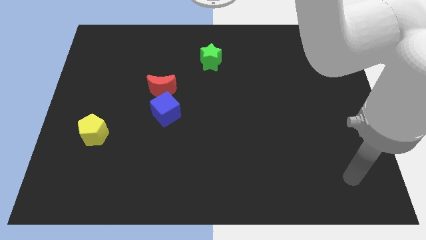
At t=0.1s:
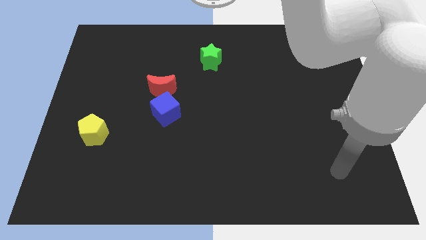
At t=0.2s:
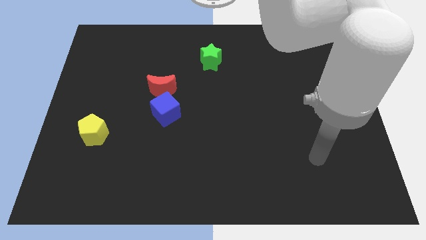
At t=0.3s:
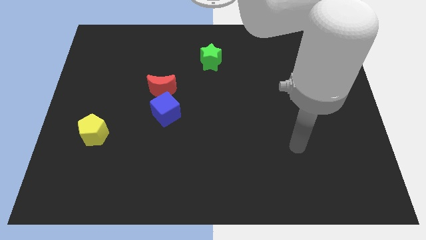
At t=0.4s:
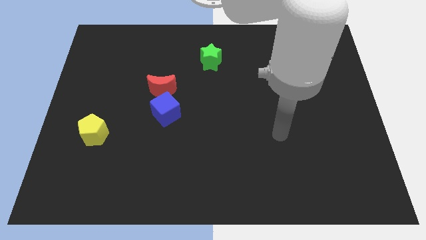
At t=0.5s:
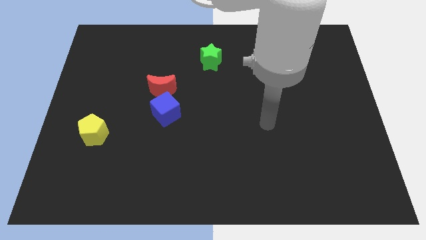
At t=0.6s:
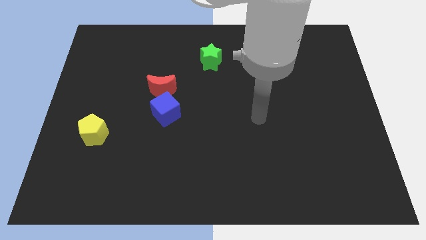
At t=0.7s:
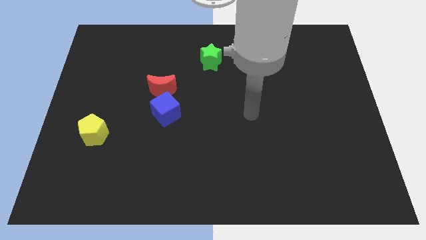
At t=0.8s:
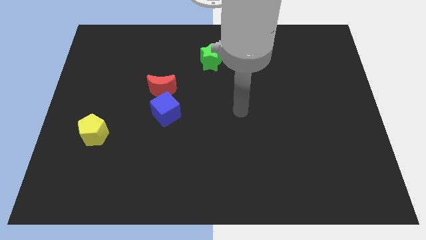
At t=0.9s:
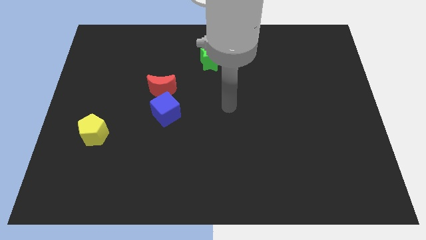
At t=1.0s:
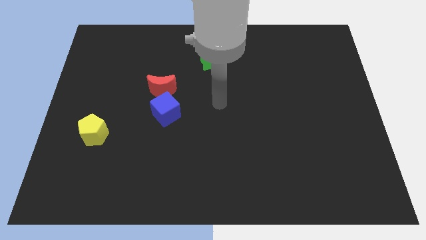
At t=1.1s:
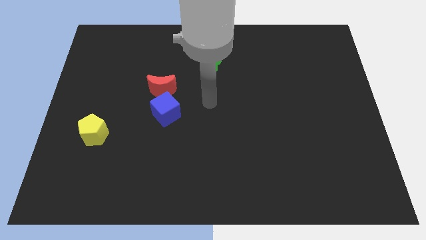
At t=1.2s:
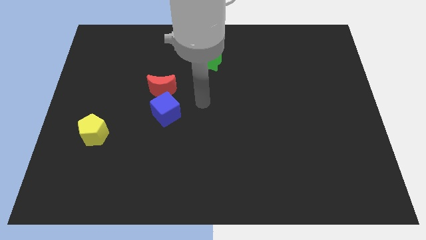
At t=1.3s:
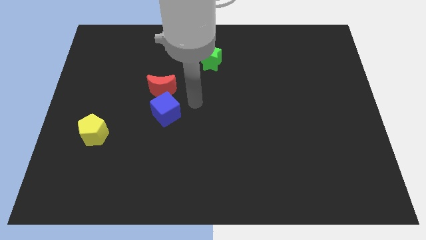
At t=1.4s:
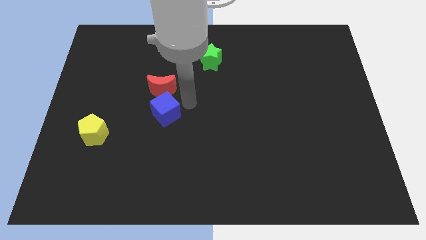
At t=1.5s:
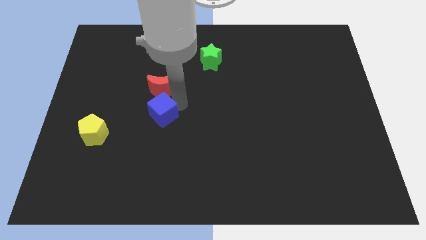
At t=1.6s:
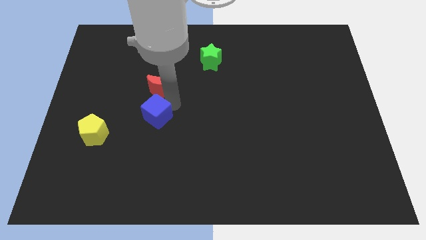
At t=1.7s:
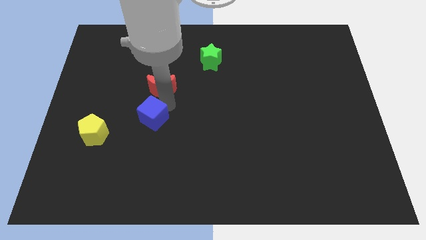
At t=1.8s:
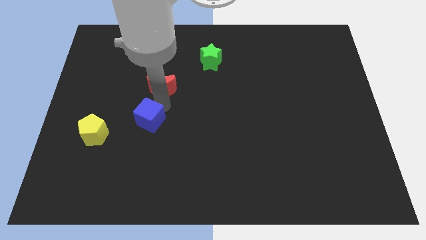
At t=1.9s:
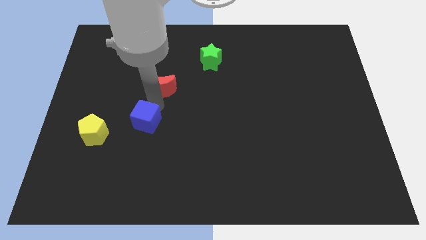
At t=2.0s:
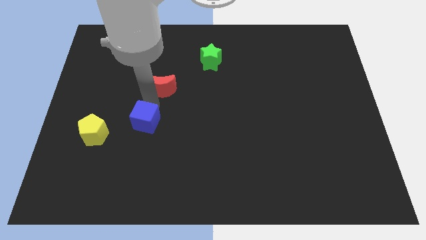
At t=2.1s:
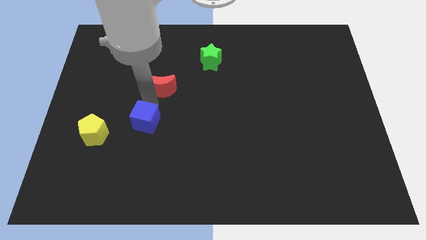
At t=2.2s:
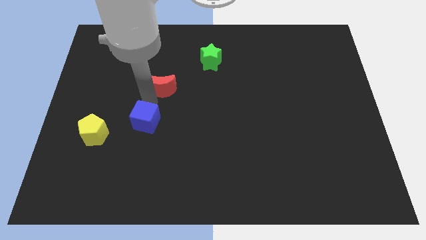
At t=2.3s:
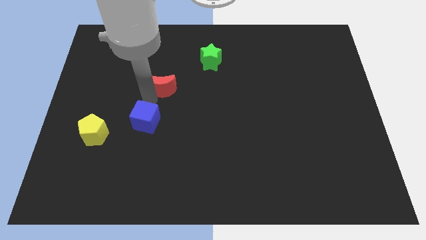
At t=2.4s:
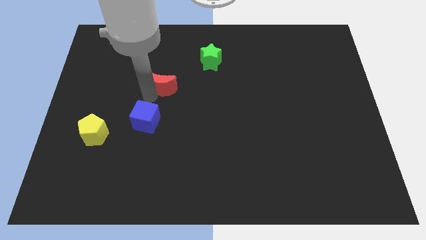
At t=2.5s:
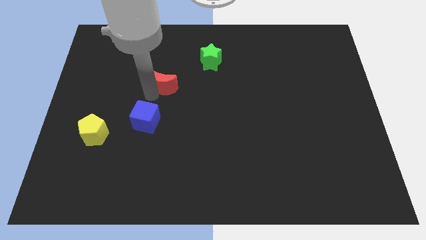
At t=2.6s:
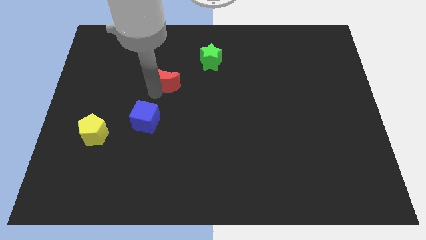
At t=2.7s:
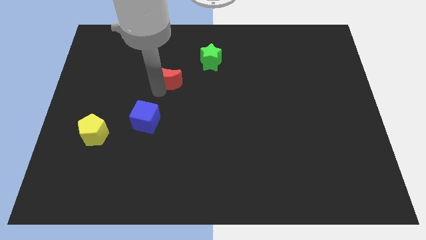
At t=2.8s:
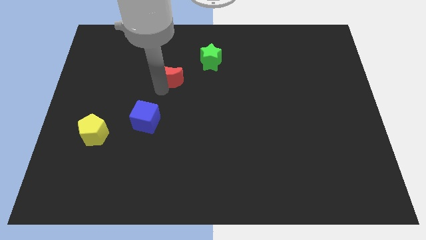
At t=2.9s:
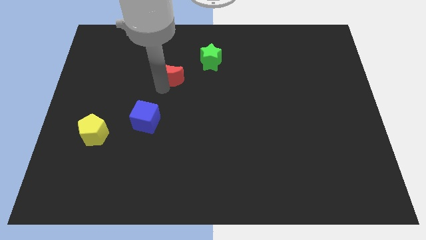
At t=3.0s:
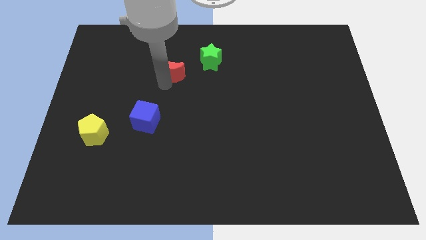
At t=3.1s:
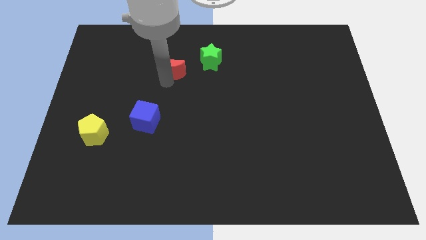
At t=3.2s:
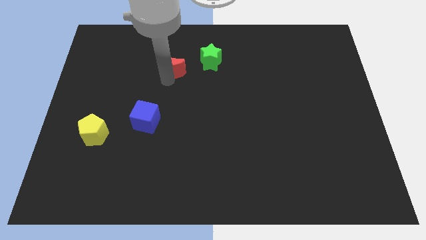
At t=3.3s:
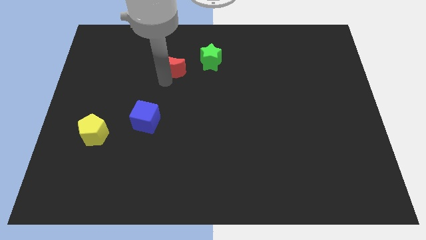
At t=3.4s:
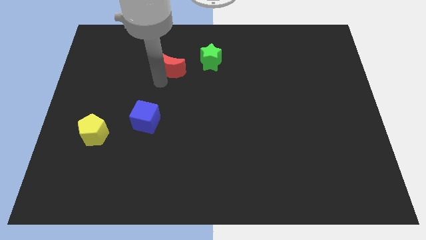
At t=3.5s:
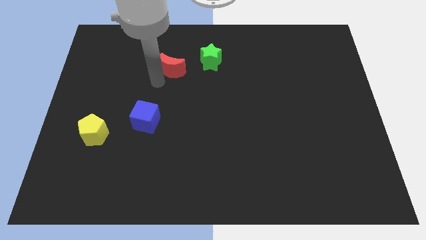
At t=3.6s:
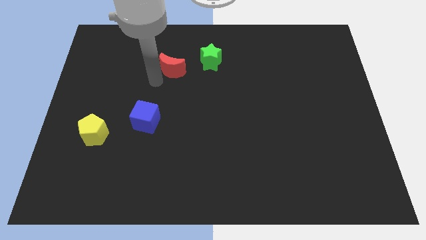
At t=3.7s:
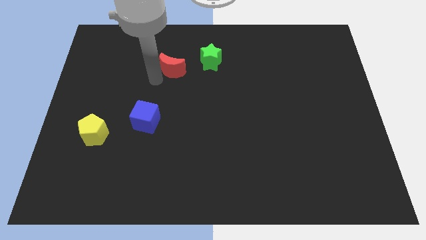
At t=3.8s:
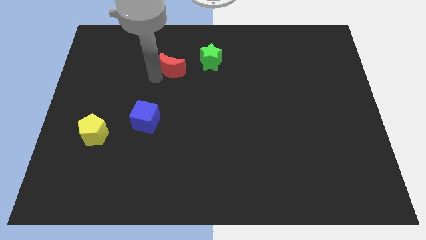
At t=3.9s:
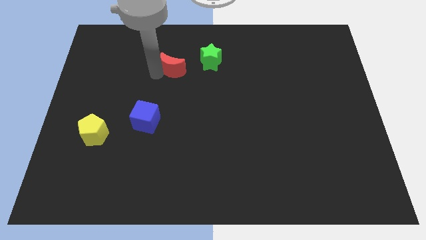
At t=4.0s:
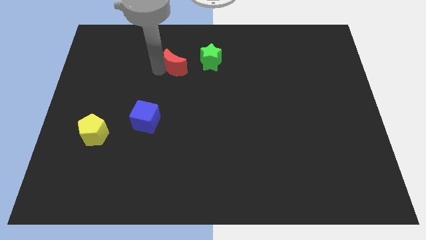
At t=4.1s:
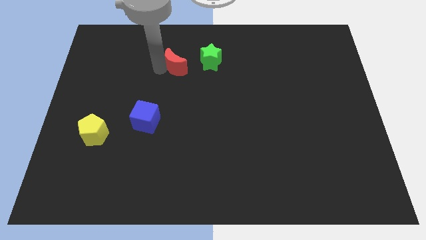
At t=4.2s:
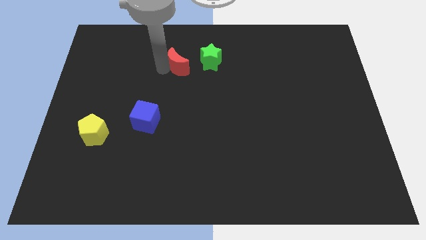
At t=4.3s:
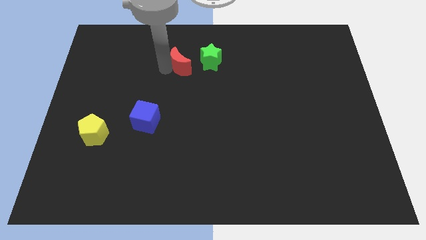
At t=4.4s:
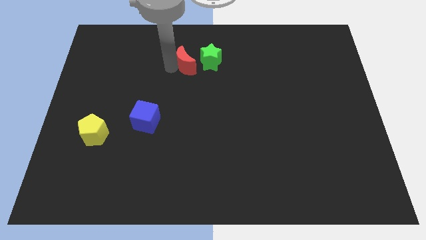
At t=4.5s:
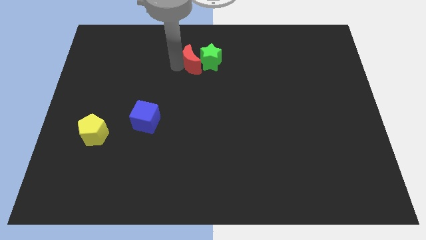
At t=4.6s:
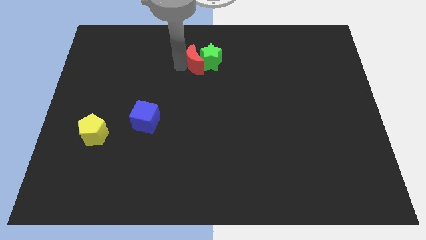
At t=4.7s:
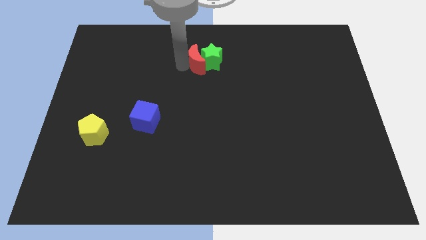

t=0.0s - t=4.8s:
put the moon close to the green star

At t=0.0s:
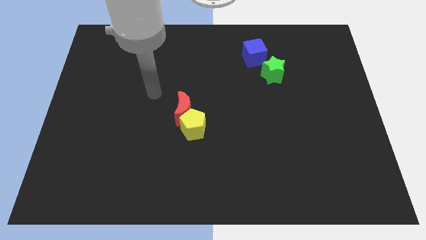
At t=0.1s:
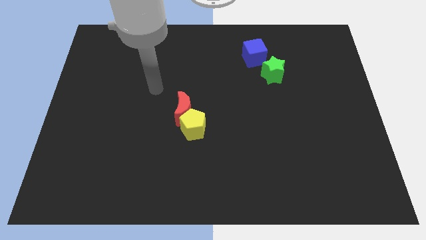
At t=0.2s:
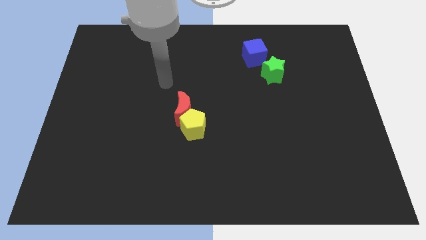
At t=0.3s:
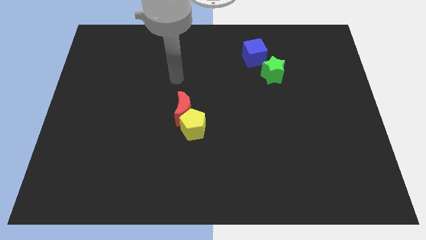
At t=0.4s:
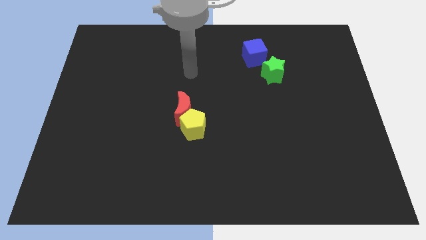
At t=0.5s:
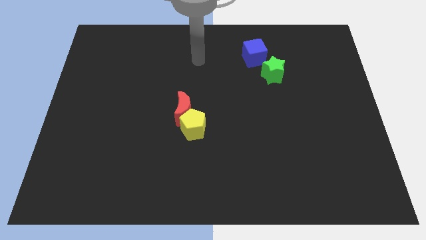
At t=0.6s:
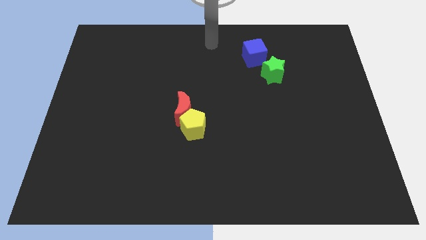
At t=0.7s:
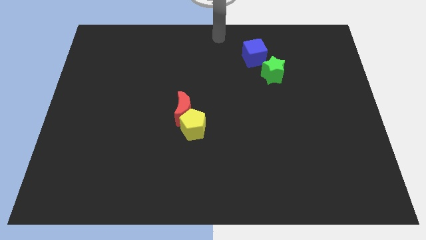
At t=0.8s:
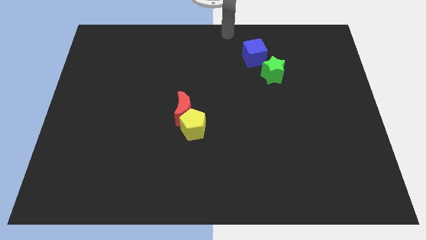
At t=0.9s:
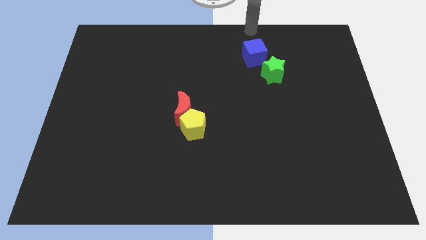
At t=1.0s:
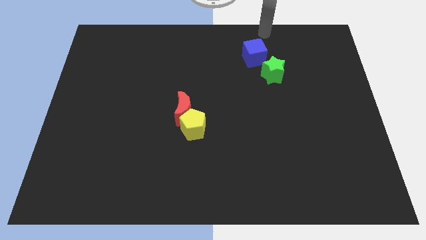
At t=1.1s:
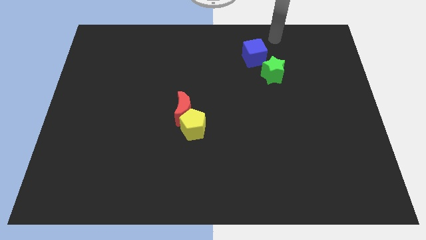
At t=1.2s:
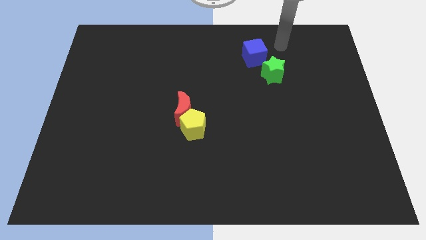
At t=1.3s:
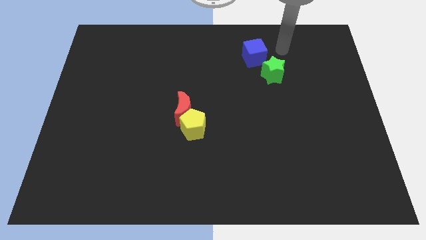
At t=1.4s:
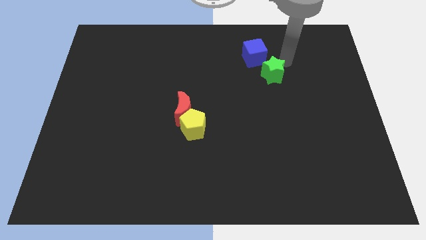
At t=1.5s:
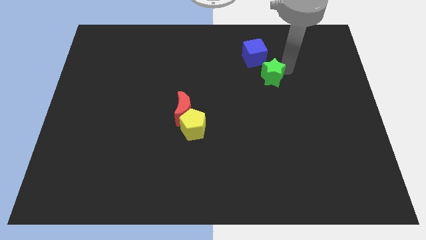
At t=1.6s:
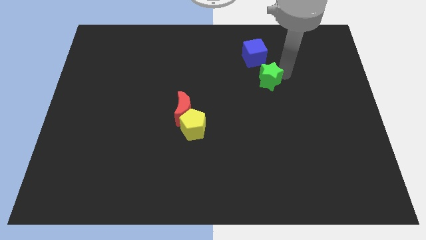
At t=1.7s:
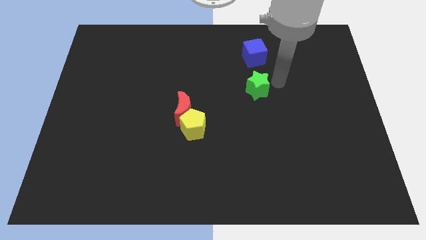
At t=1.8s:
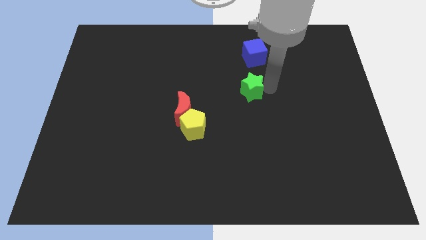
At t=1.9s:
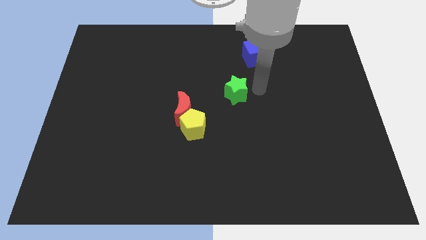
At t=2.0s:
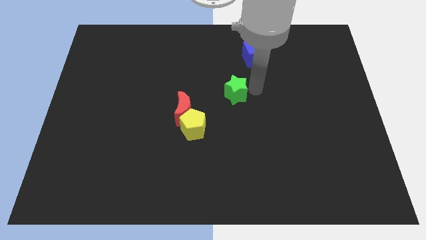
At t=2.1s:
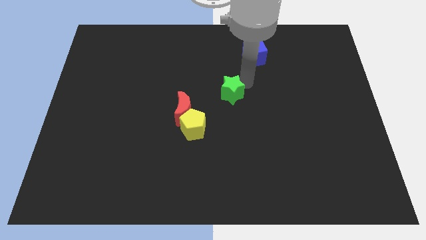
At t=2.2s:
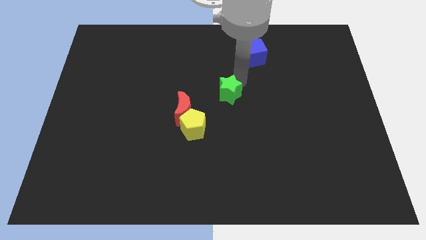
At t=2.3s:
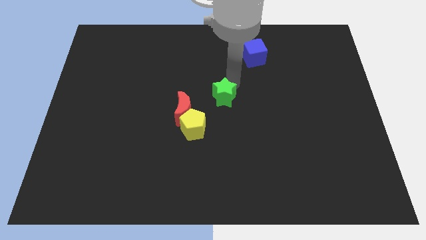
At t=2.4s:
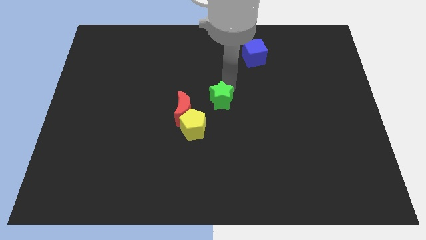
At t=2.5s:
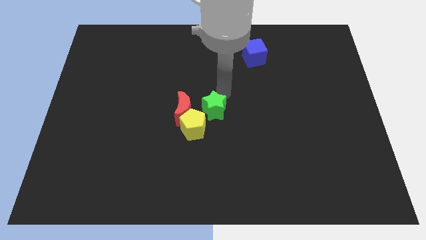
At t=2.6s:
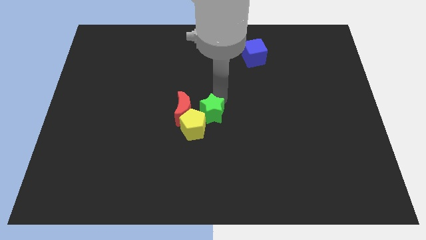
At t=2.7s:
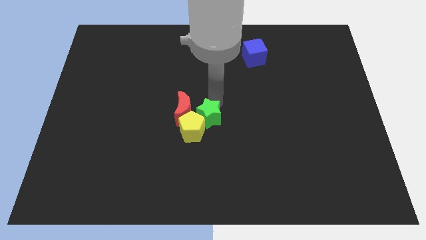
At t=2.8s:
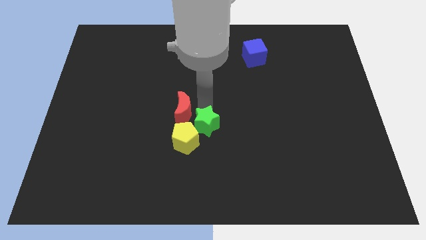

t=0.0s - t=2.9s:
push the star to the pentagon

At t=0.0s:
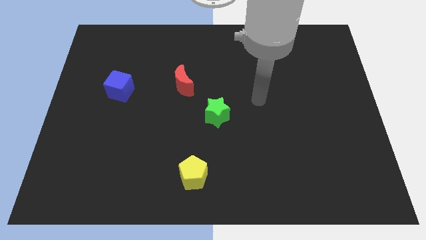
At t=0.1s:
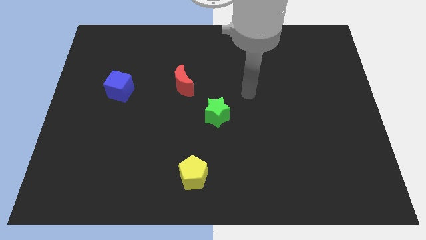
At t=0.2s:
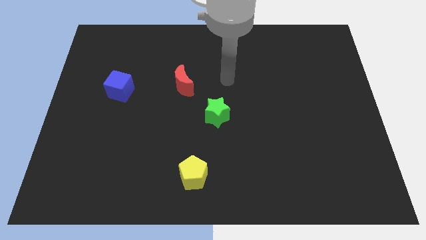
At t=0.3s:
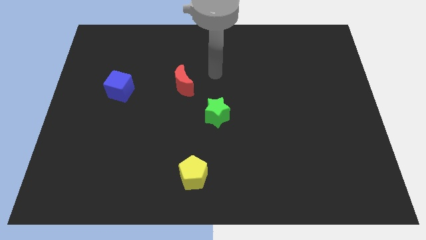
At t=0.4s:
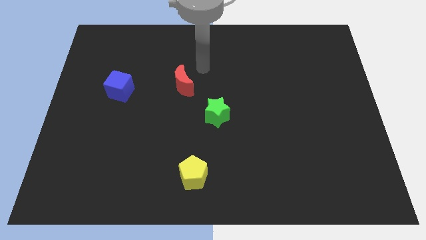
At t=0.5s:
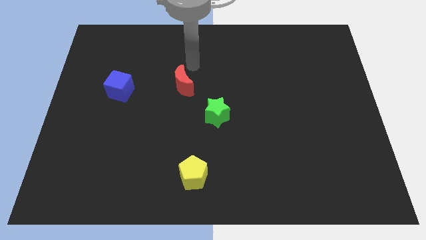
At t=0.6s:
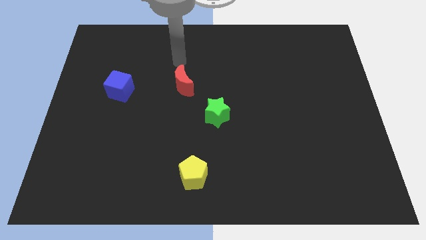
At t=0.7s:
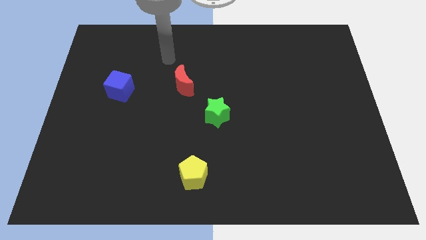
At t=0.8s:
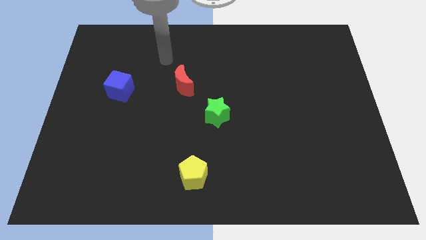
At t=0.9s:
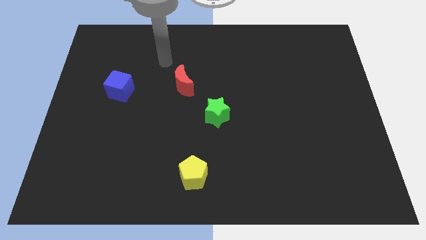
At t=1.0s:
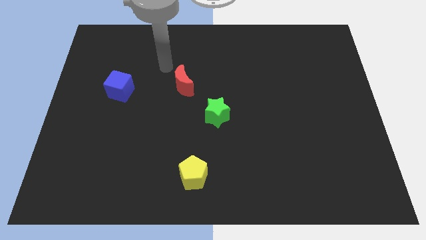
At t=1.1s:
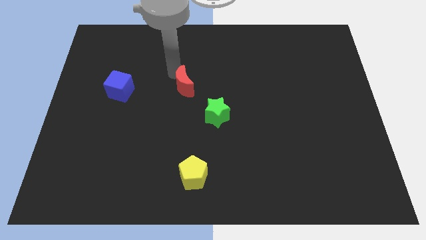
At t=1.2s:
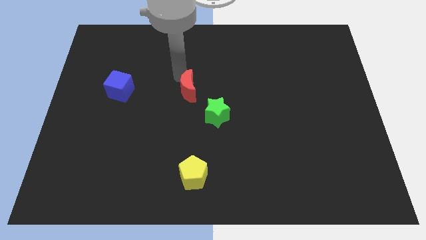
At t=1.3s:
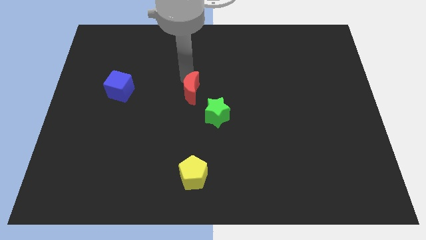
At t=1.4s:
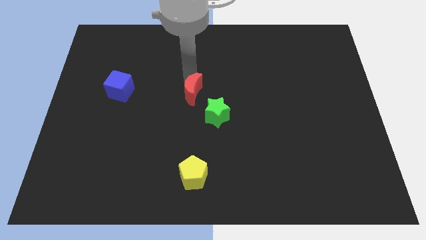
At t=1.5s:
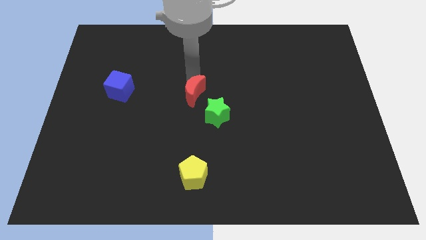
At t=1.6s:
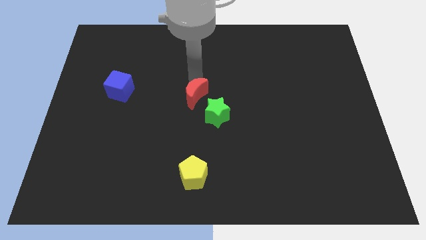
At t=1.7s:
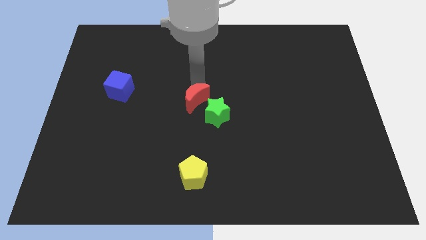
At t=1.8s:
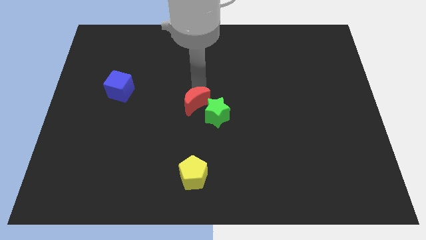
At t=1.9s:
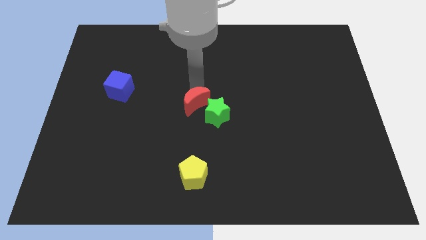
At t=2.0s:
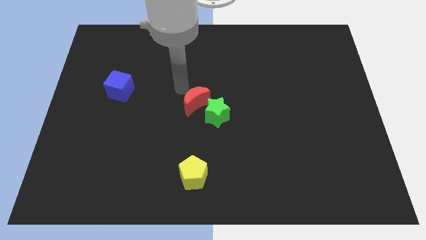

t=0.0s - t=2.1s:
put the red moon towards the green block
